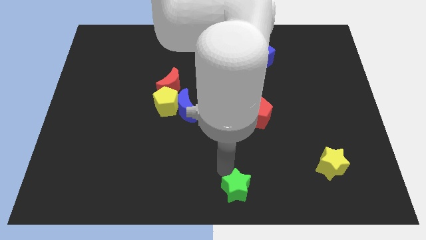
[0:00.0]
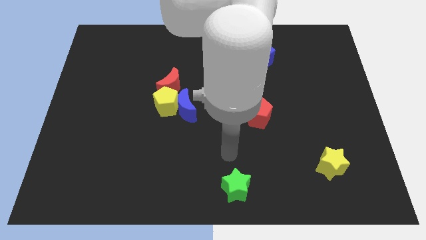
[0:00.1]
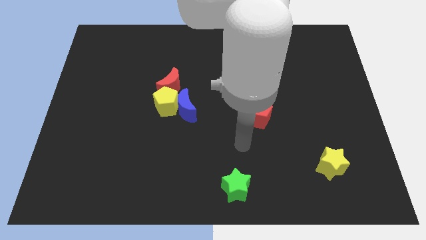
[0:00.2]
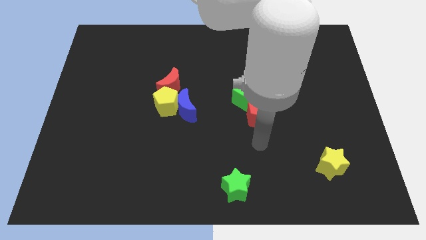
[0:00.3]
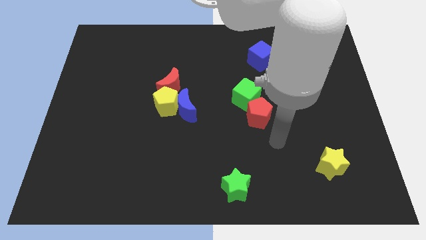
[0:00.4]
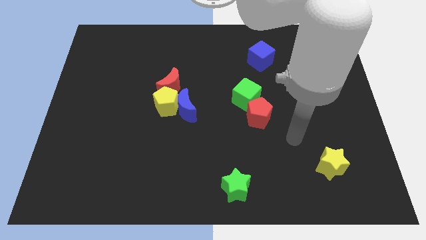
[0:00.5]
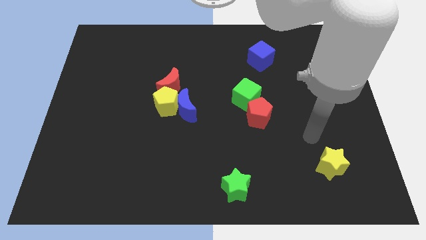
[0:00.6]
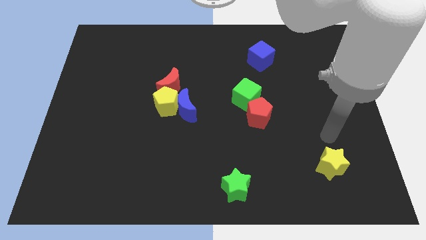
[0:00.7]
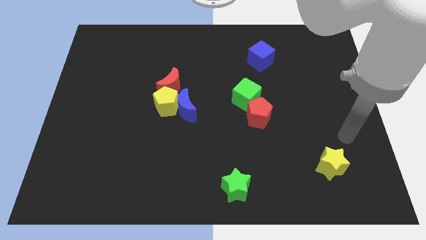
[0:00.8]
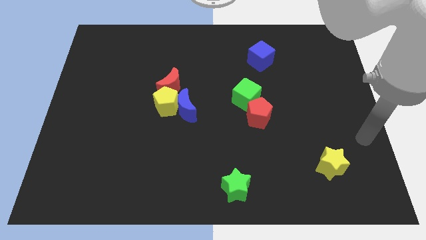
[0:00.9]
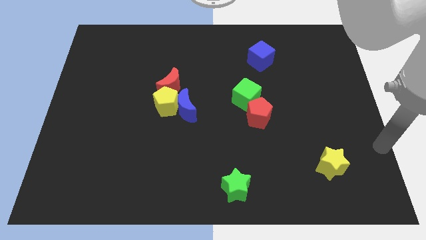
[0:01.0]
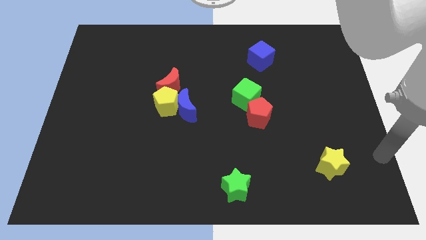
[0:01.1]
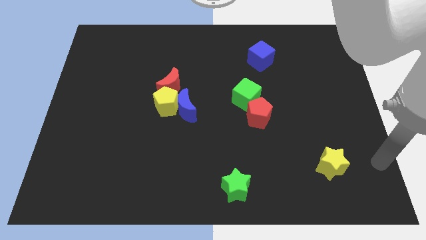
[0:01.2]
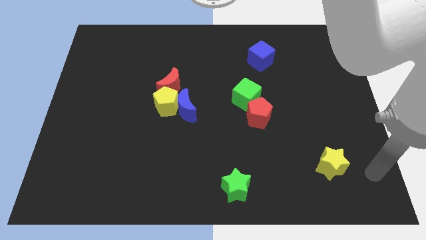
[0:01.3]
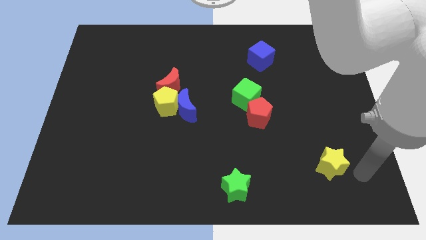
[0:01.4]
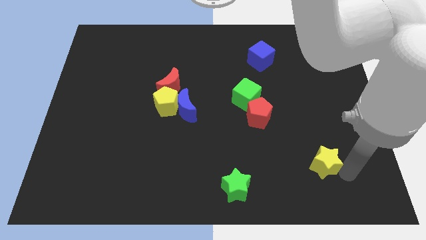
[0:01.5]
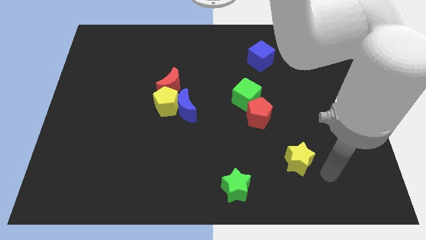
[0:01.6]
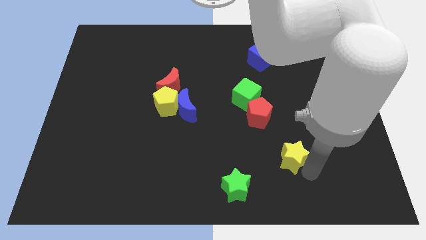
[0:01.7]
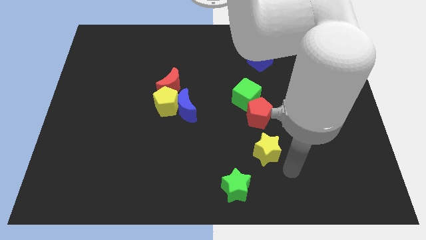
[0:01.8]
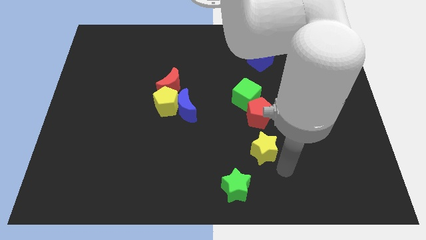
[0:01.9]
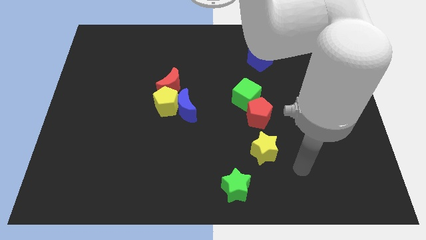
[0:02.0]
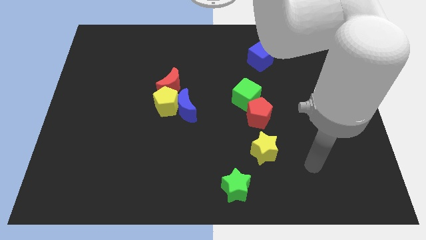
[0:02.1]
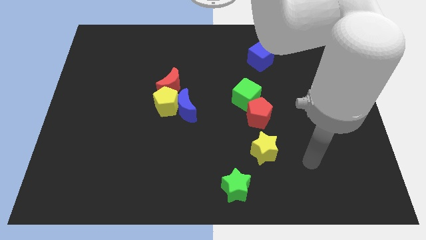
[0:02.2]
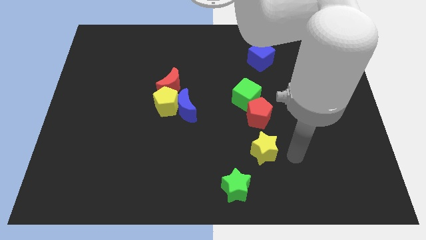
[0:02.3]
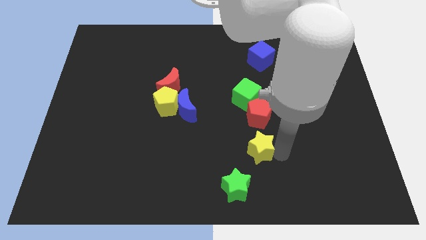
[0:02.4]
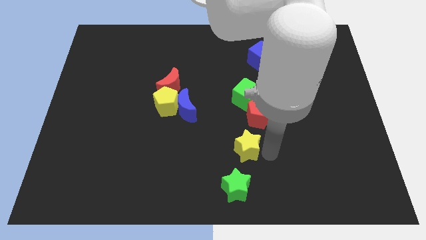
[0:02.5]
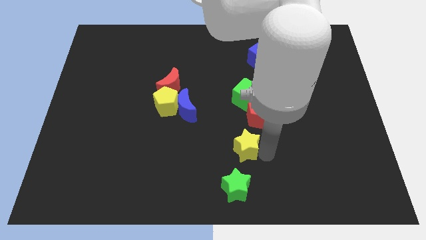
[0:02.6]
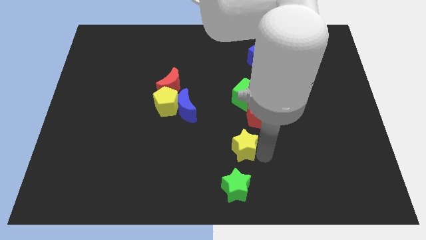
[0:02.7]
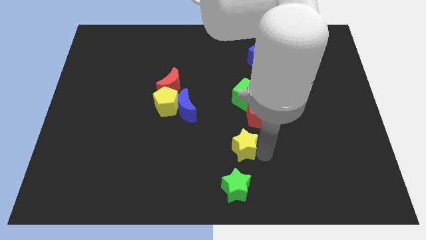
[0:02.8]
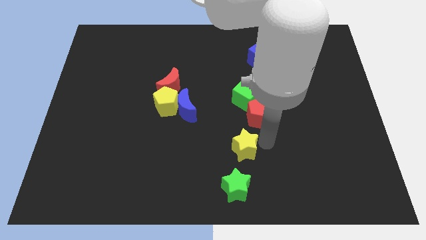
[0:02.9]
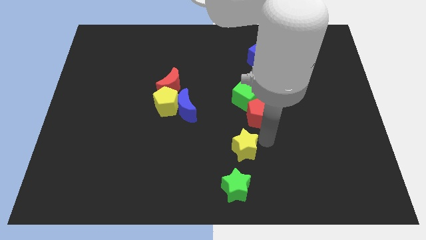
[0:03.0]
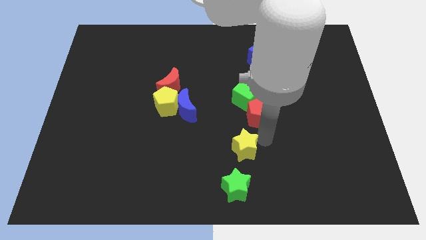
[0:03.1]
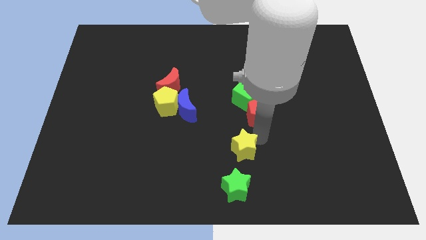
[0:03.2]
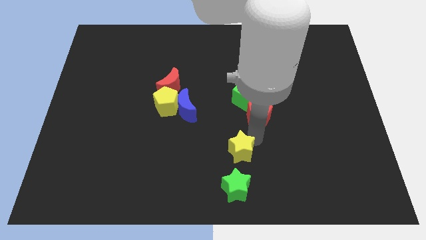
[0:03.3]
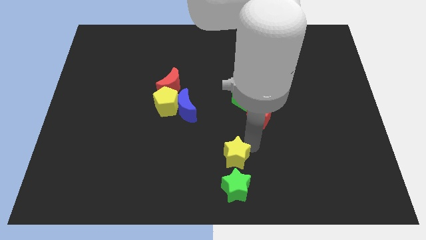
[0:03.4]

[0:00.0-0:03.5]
push the yellow star on the top of the green star

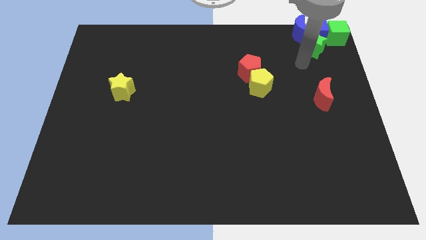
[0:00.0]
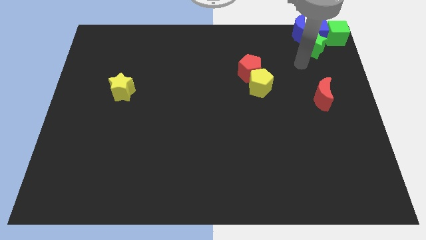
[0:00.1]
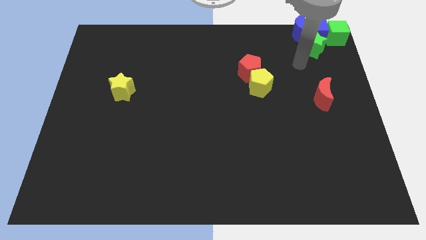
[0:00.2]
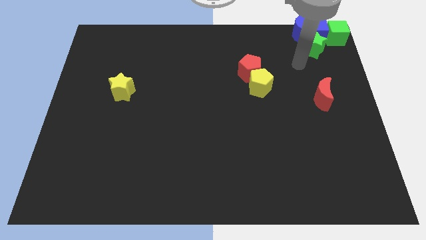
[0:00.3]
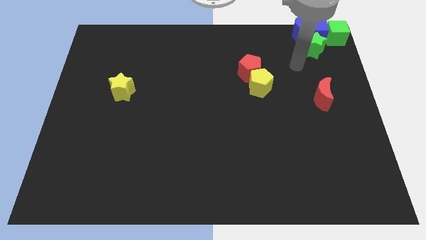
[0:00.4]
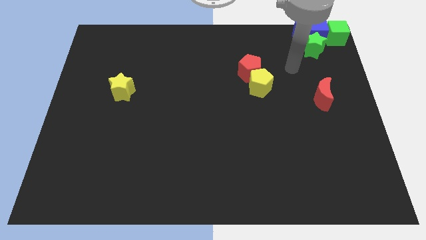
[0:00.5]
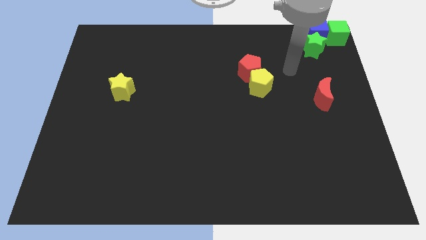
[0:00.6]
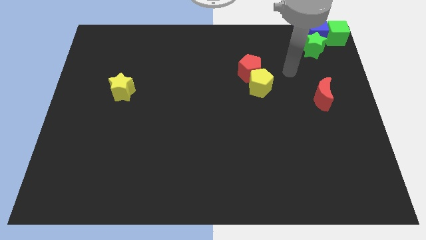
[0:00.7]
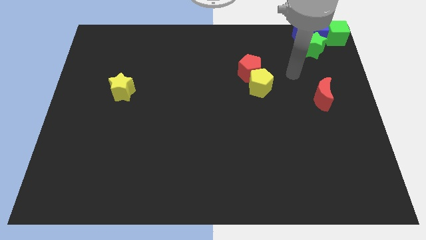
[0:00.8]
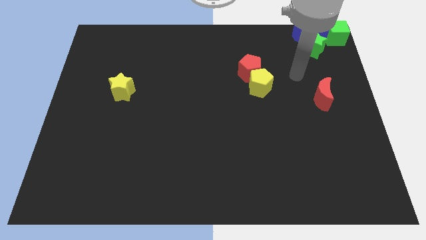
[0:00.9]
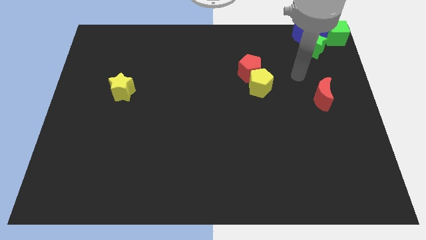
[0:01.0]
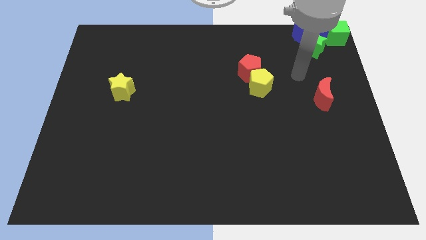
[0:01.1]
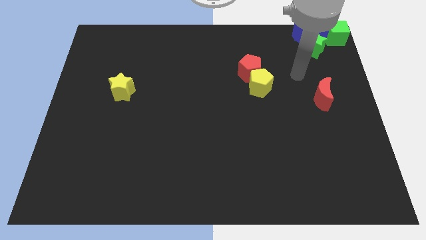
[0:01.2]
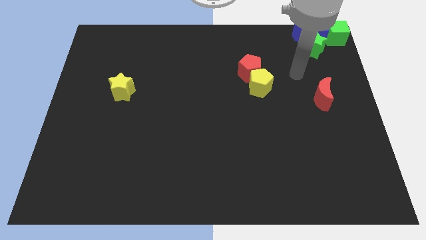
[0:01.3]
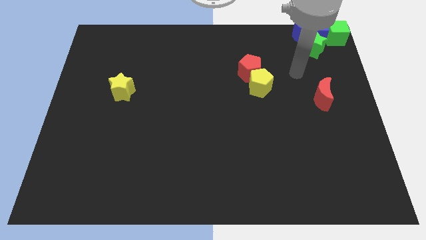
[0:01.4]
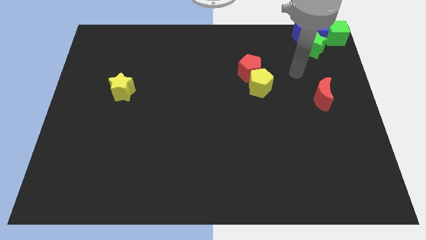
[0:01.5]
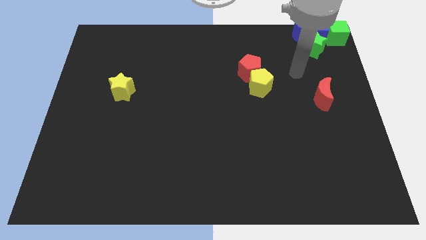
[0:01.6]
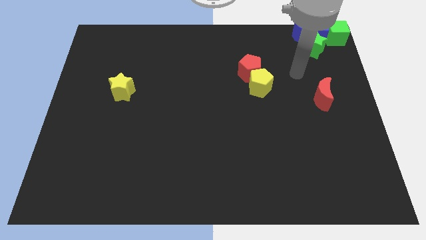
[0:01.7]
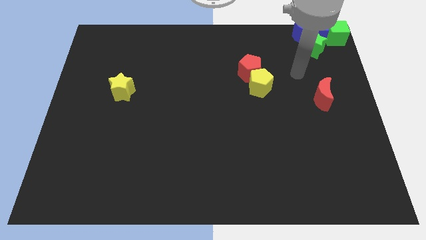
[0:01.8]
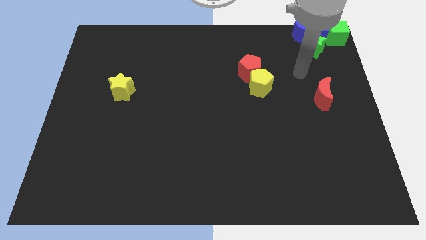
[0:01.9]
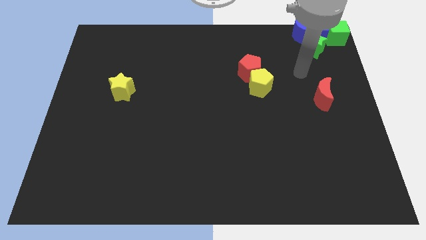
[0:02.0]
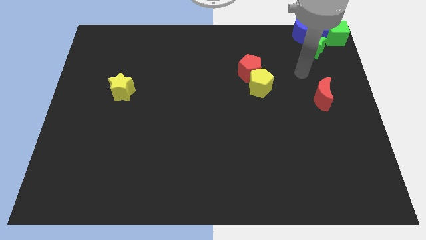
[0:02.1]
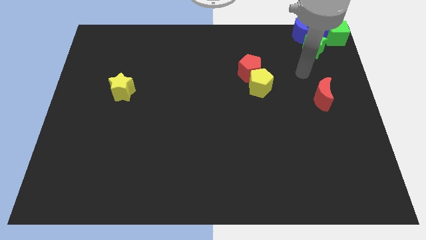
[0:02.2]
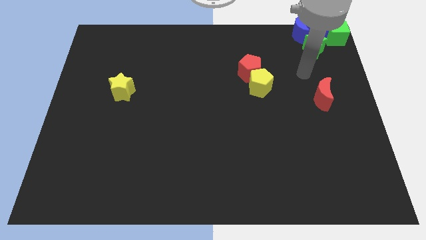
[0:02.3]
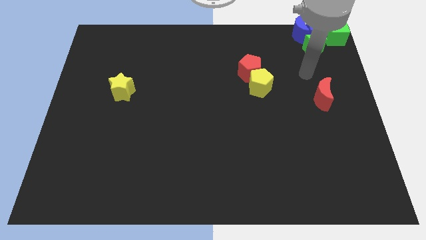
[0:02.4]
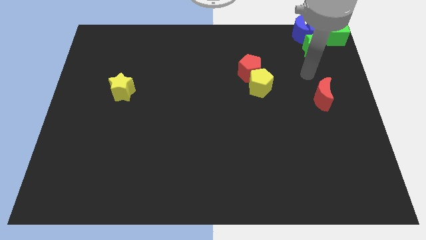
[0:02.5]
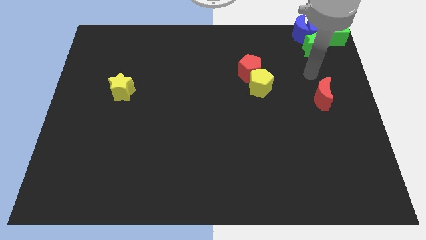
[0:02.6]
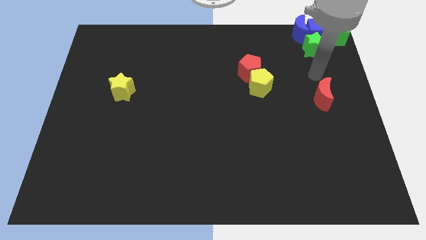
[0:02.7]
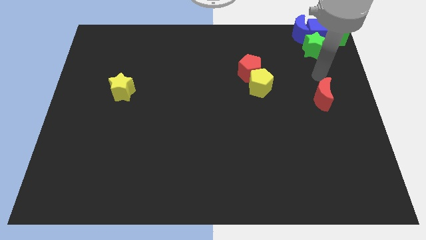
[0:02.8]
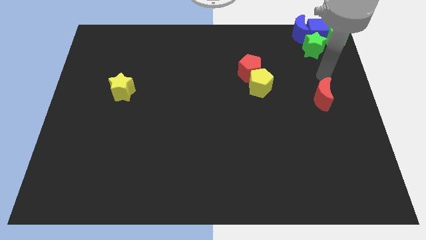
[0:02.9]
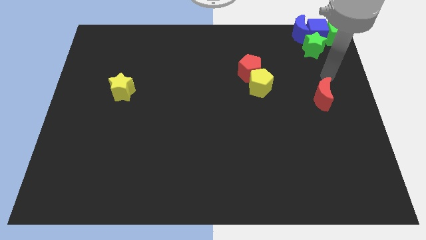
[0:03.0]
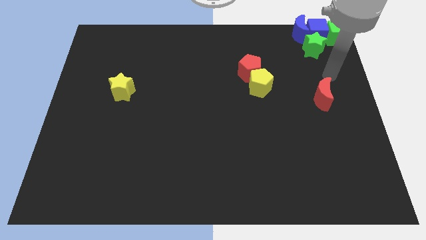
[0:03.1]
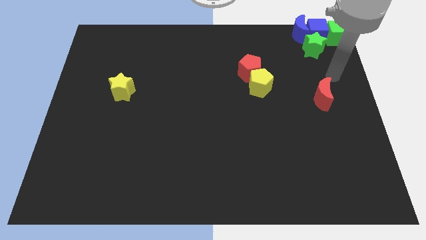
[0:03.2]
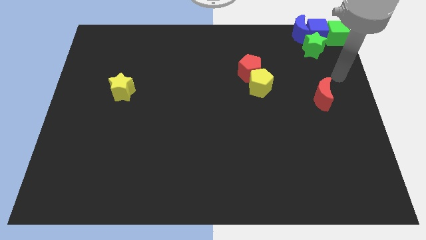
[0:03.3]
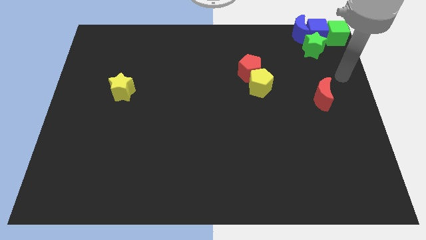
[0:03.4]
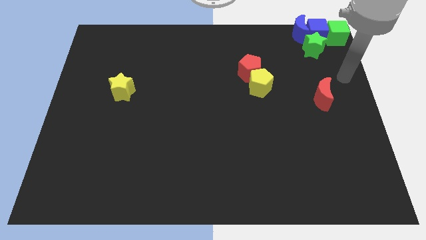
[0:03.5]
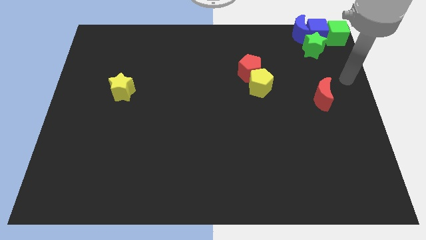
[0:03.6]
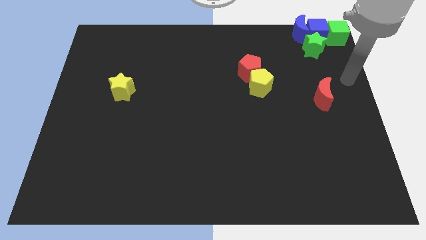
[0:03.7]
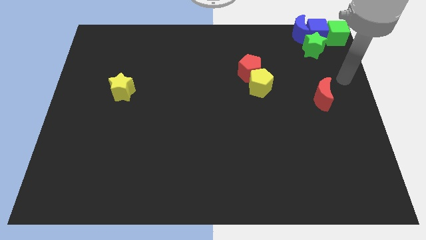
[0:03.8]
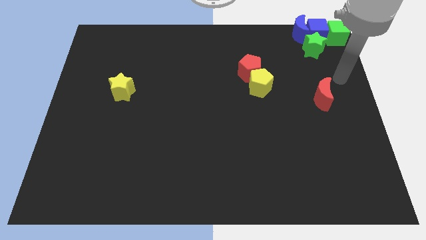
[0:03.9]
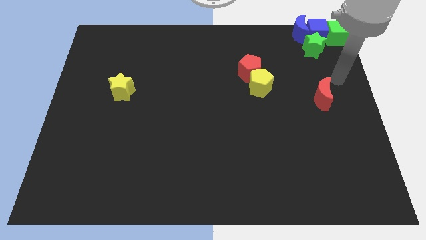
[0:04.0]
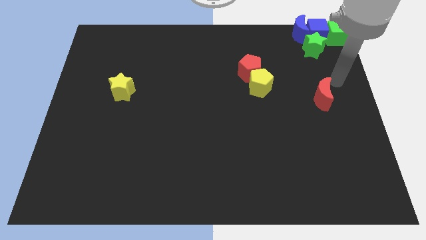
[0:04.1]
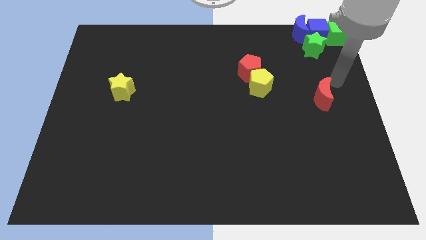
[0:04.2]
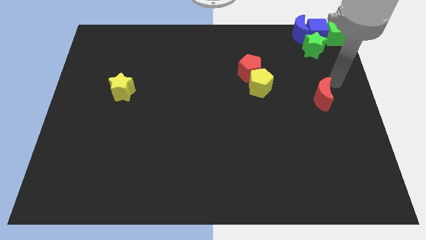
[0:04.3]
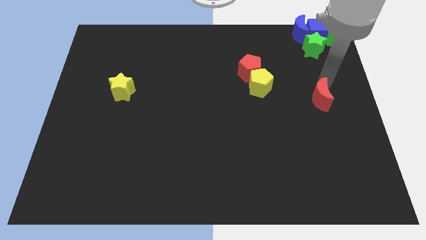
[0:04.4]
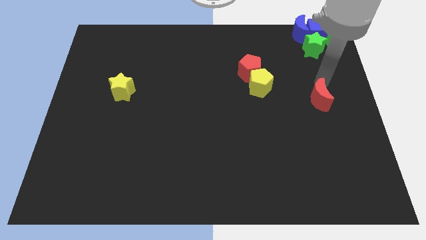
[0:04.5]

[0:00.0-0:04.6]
move your hand above the red moon

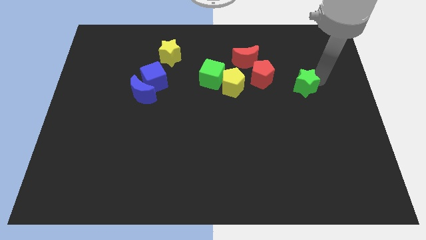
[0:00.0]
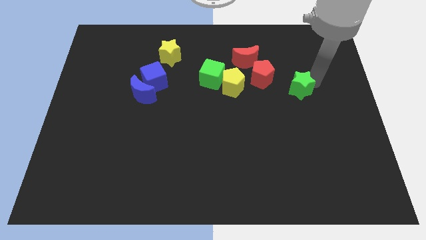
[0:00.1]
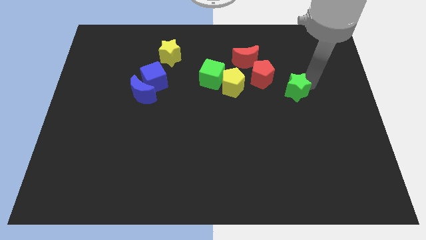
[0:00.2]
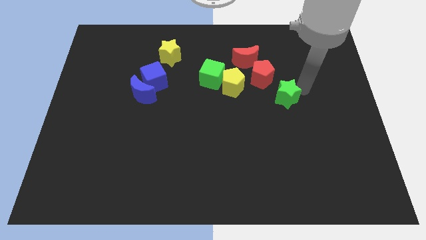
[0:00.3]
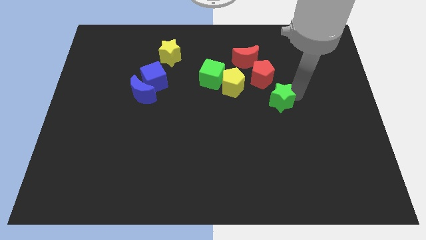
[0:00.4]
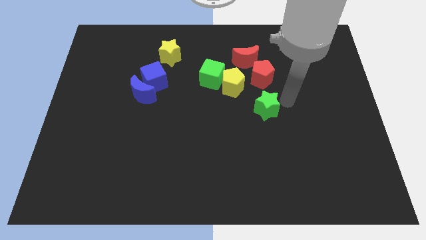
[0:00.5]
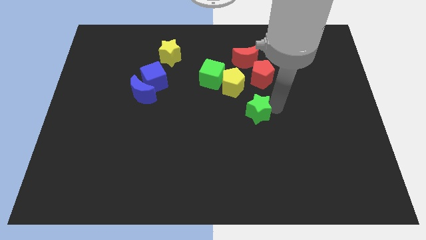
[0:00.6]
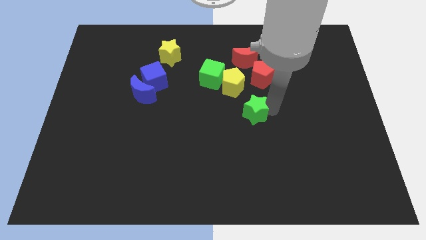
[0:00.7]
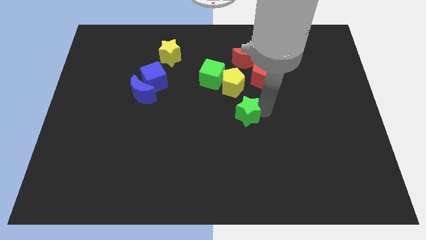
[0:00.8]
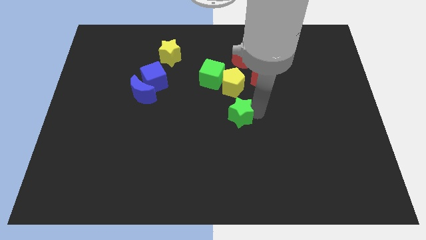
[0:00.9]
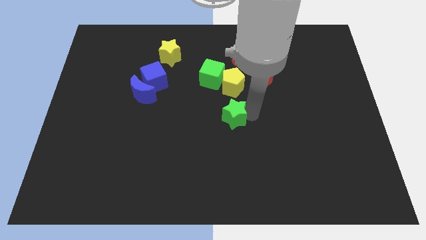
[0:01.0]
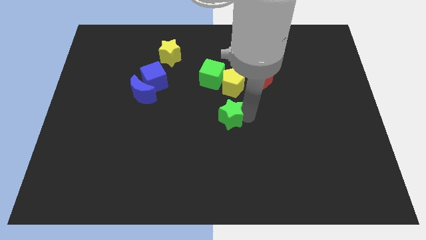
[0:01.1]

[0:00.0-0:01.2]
place the green star to the bottom of the yellow pentagon
